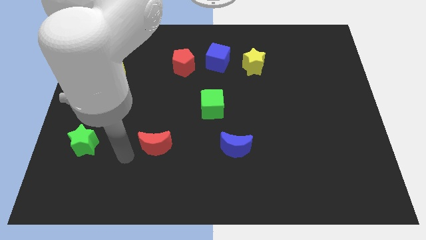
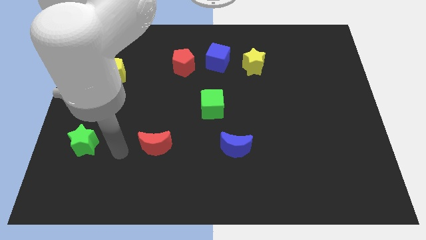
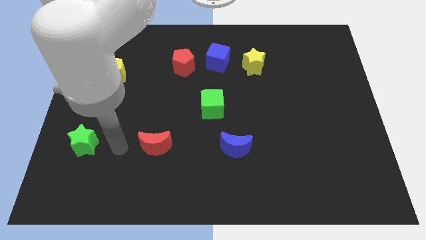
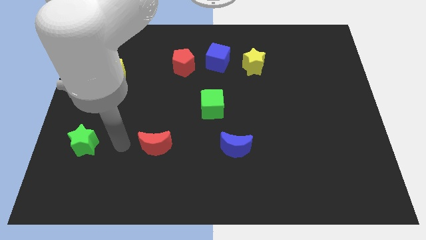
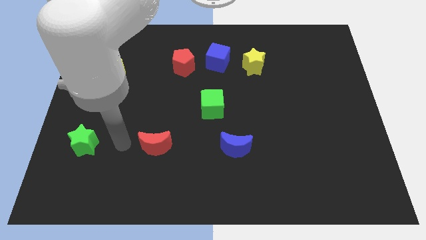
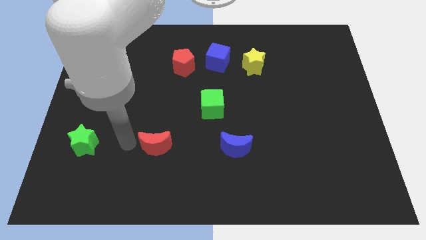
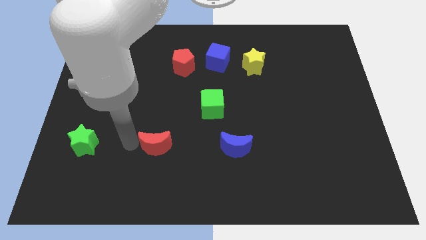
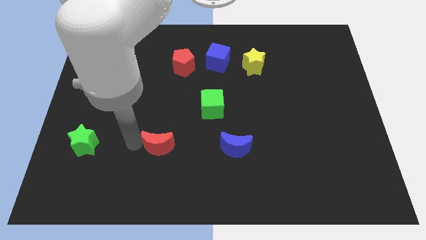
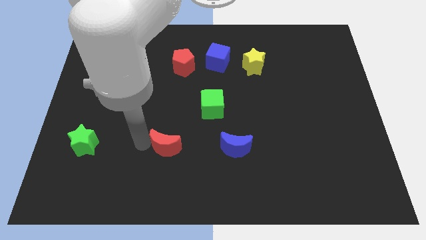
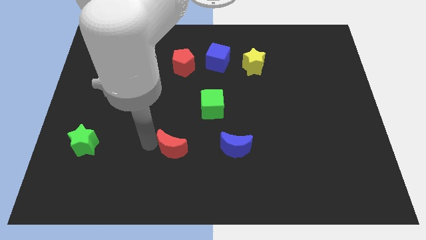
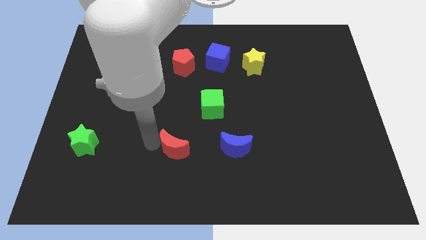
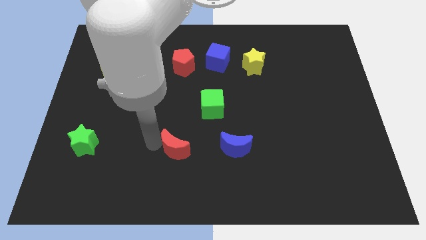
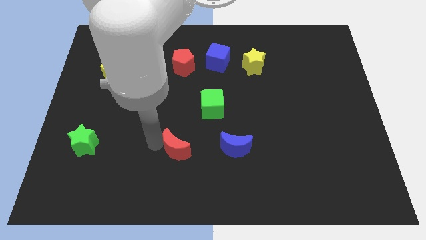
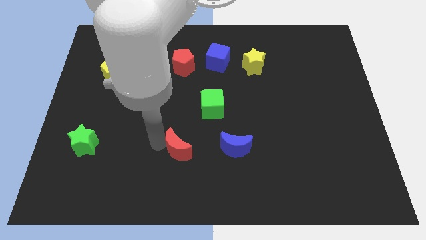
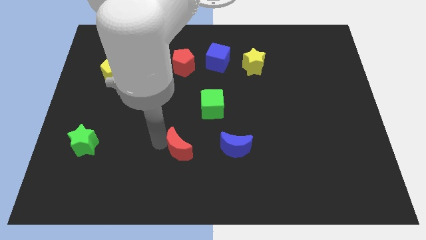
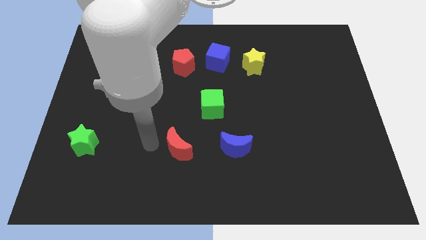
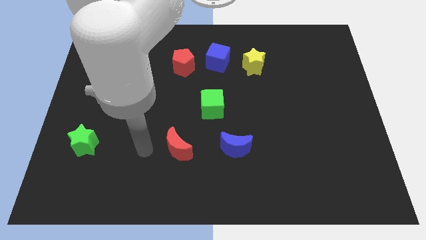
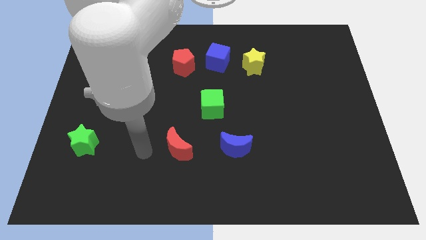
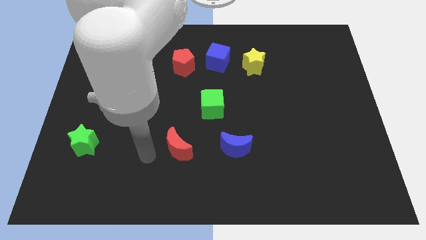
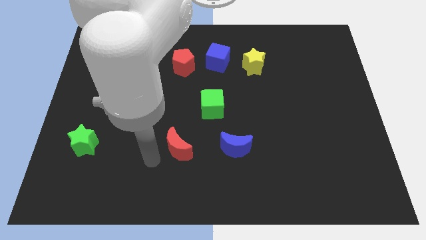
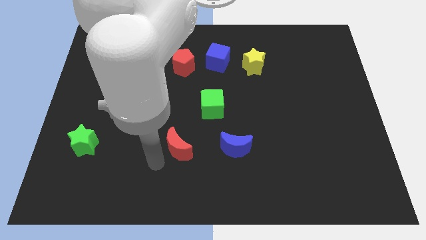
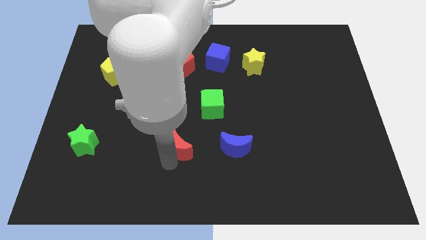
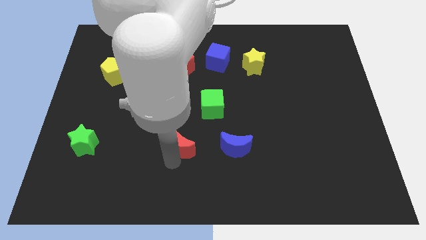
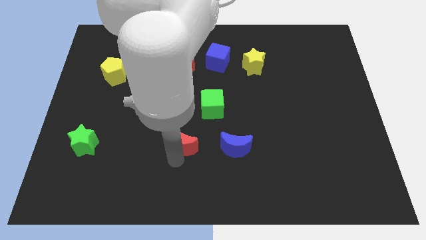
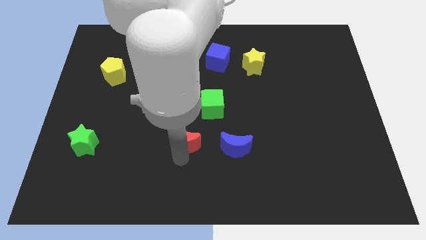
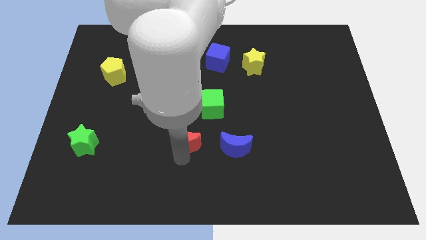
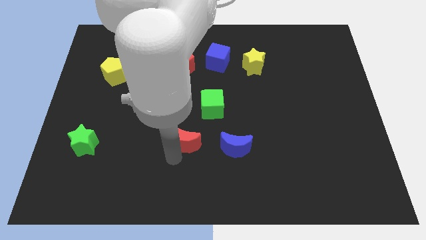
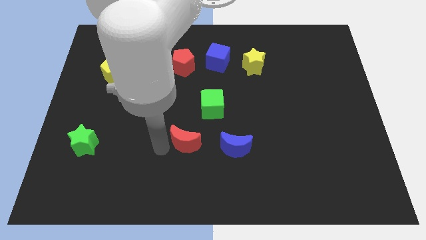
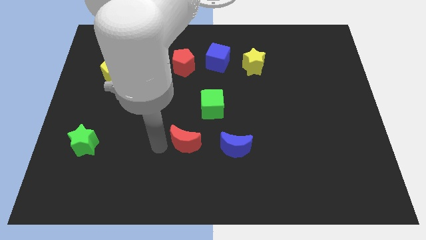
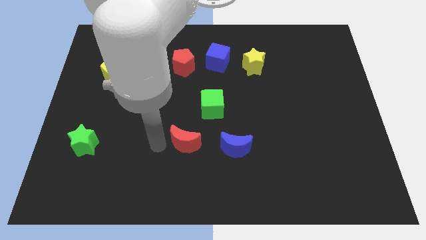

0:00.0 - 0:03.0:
place the red moon to the left of blue moon

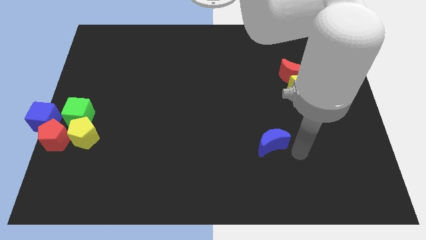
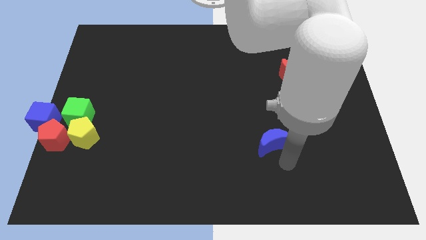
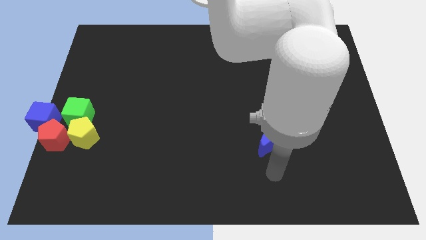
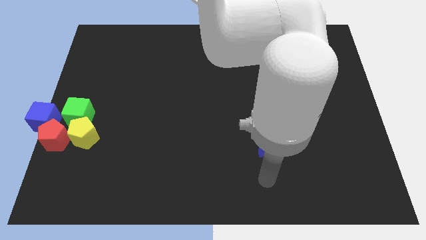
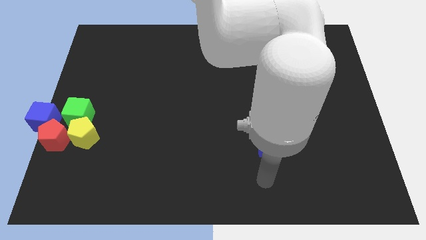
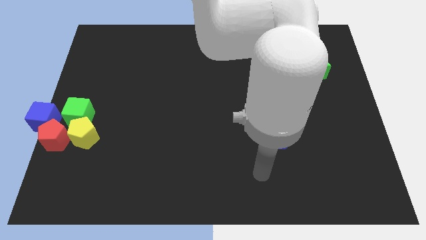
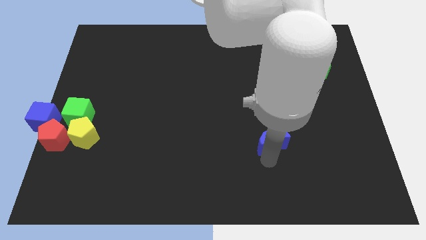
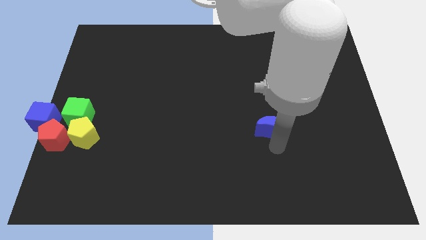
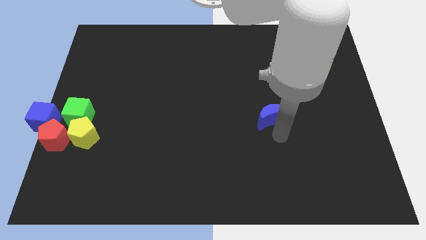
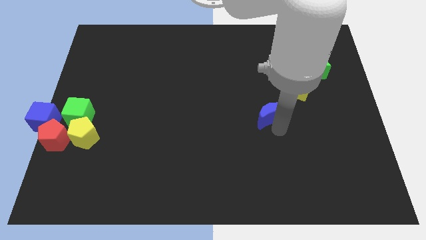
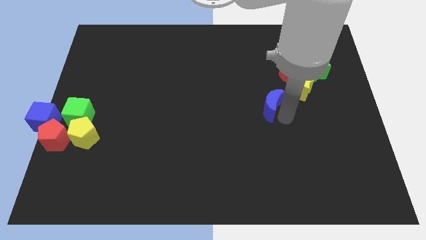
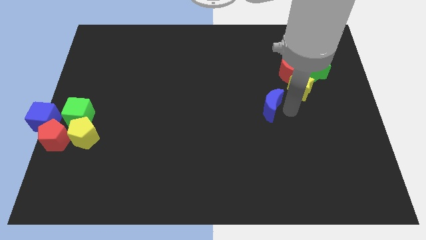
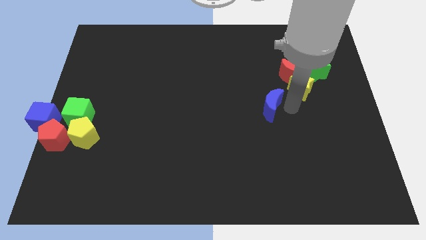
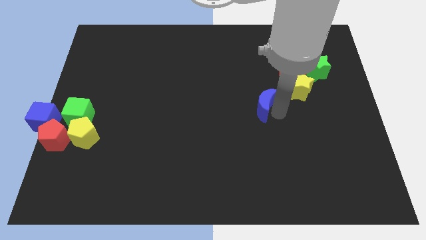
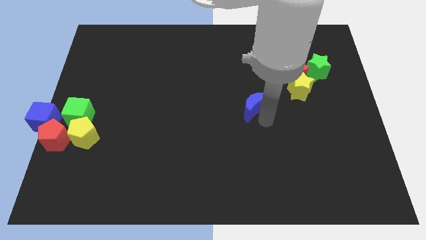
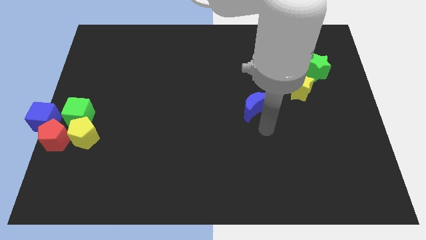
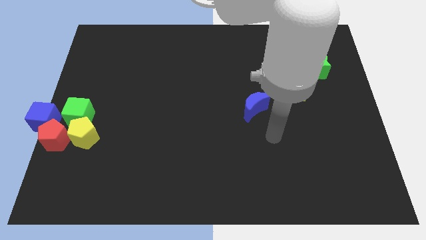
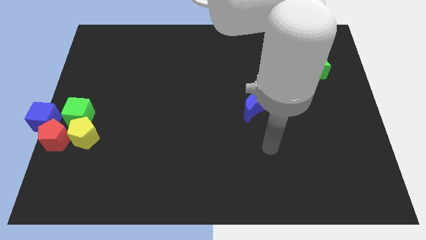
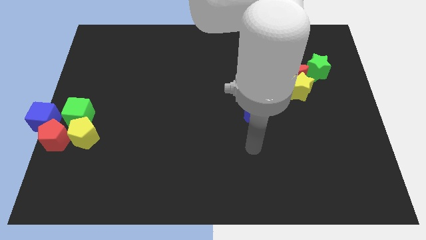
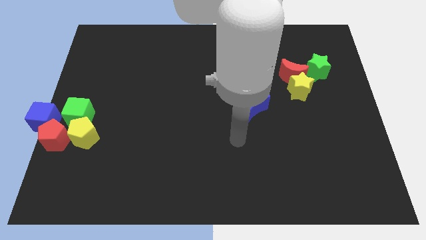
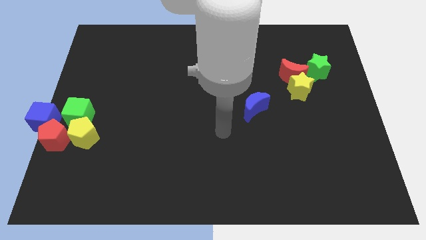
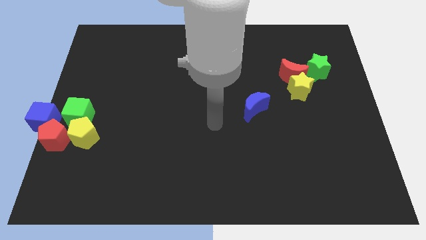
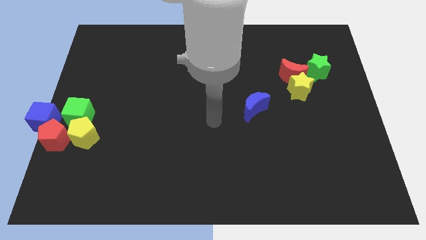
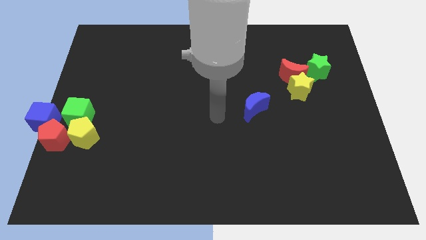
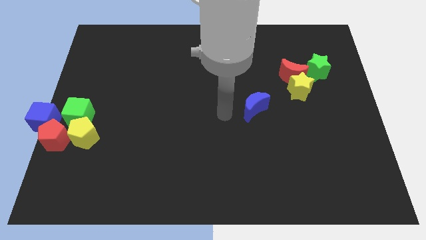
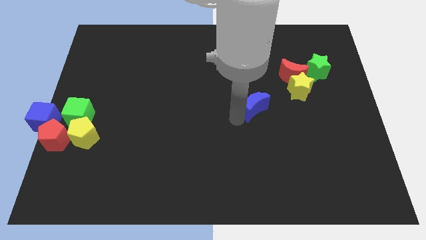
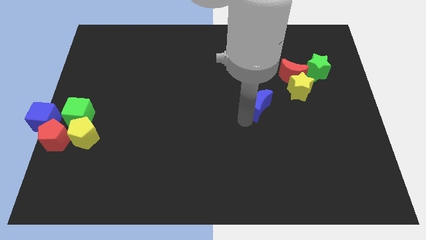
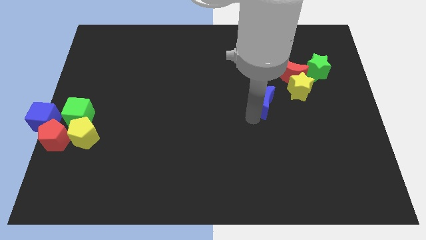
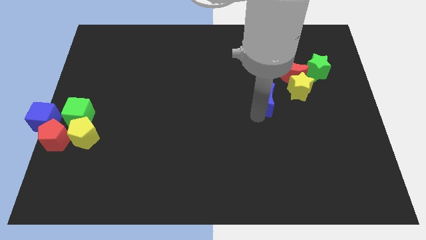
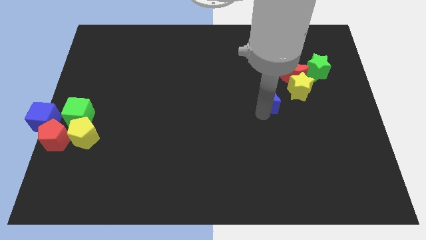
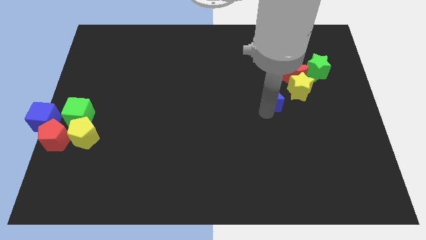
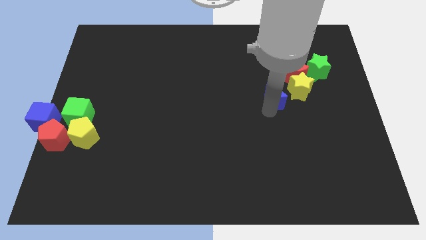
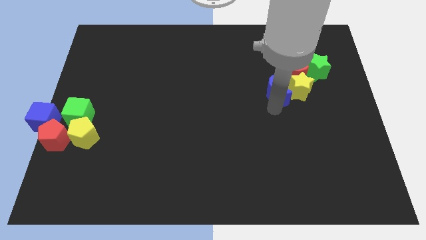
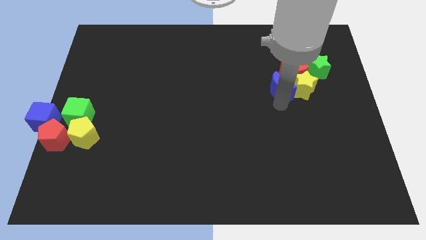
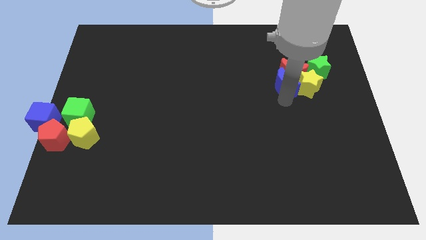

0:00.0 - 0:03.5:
move the blue moon into the yellow star and red moon

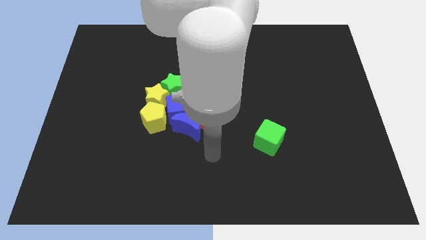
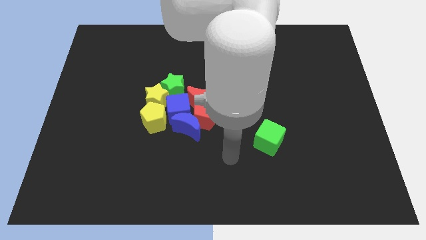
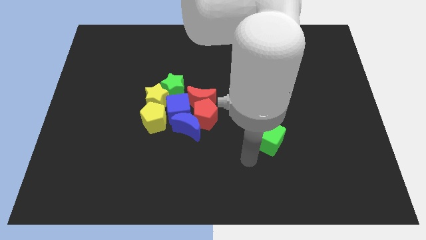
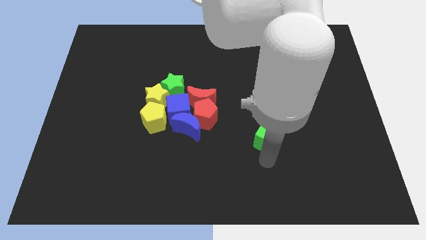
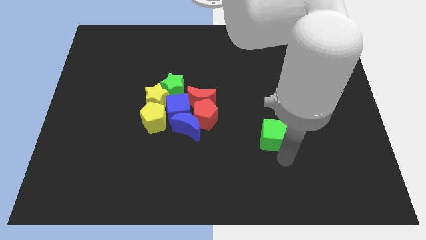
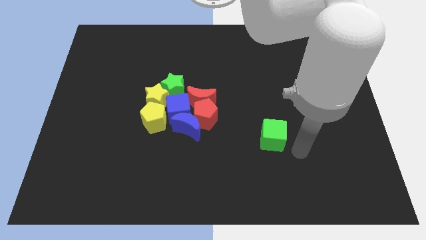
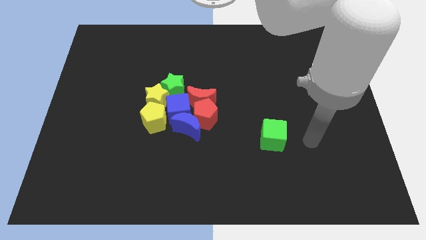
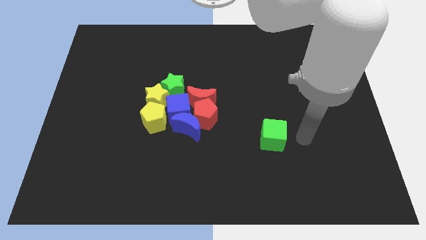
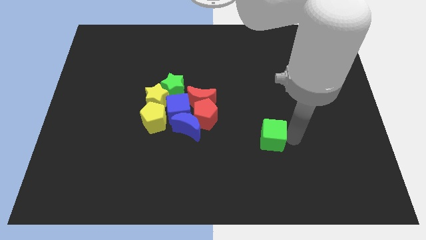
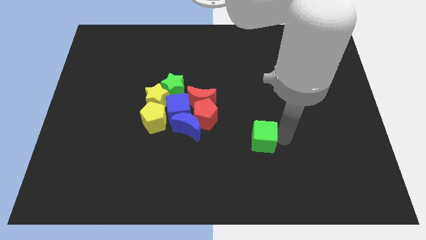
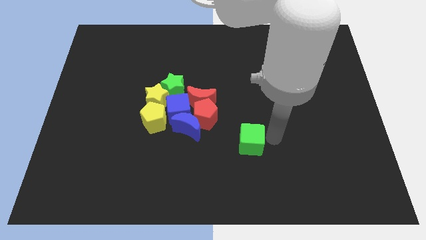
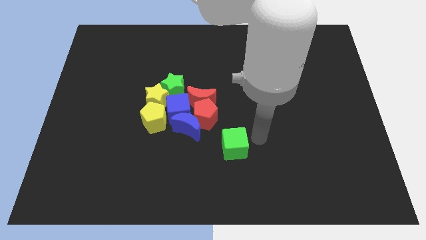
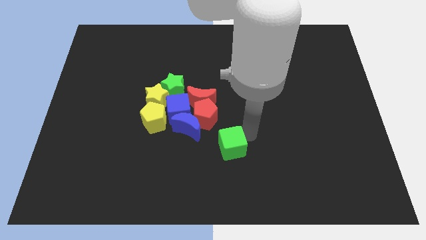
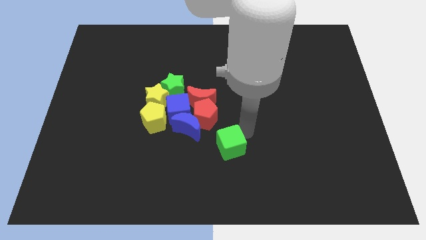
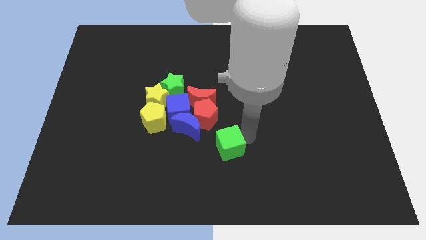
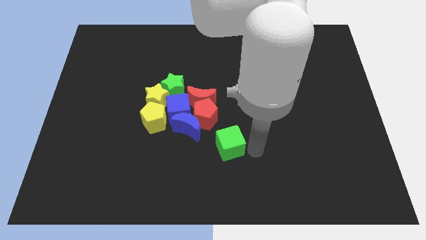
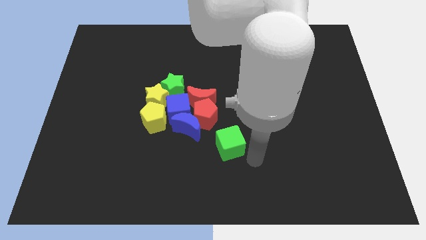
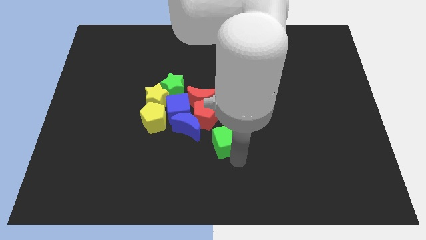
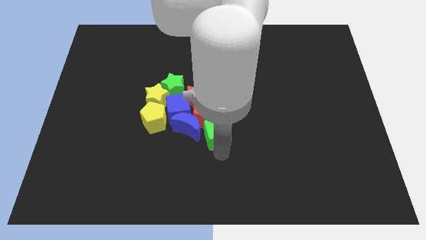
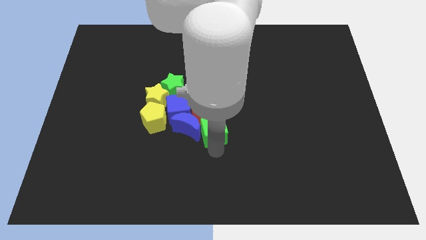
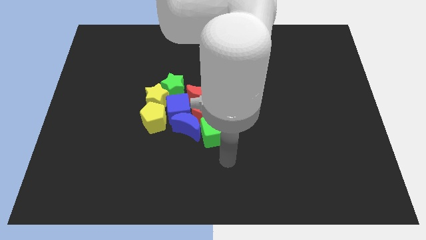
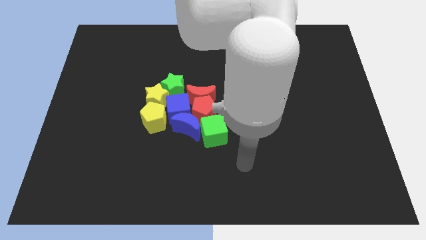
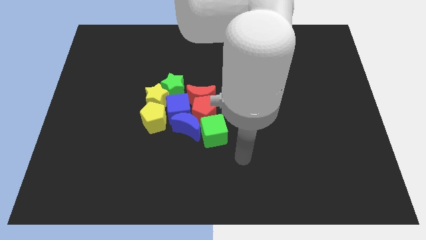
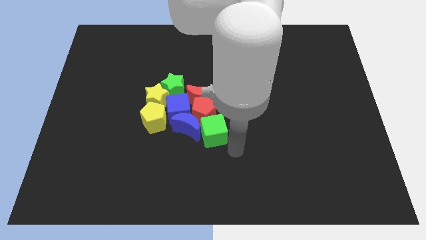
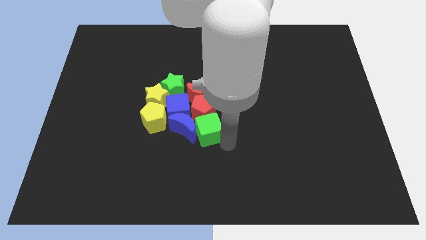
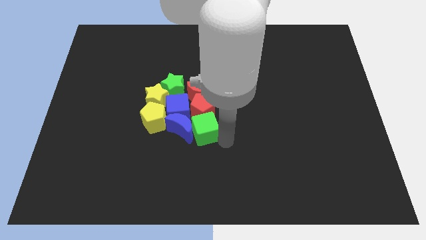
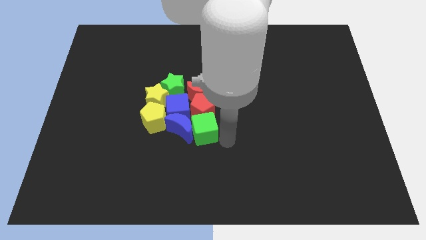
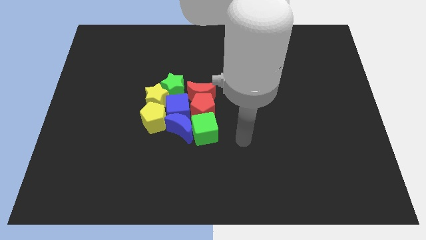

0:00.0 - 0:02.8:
push the green cube into the group of blocks
